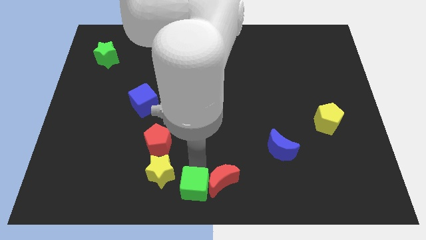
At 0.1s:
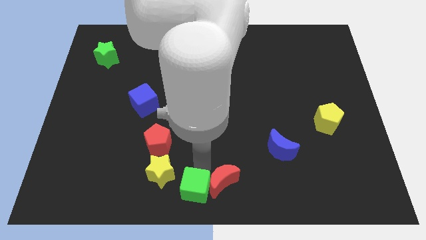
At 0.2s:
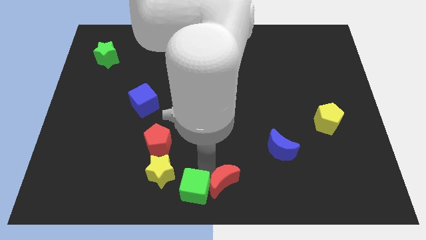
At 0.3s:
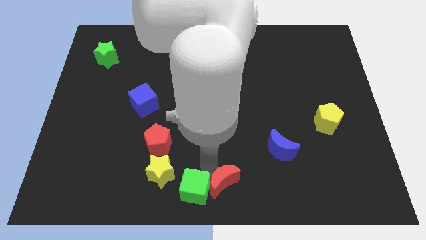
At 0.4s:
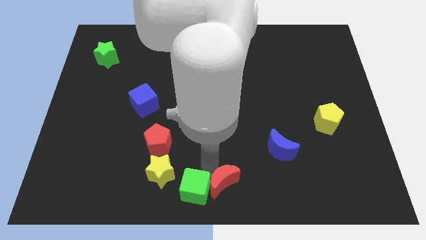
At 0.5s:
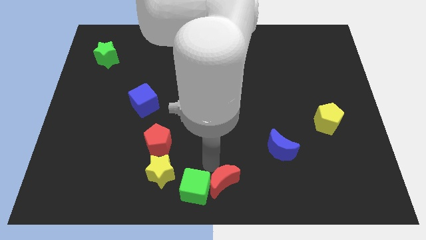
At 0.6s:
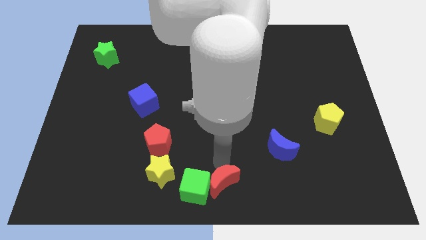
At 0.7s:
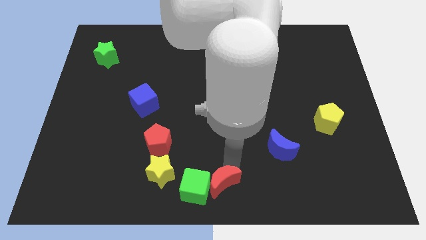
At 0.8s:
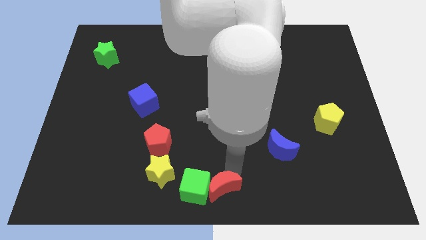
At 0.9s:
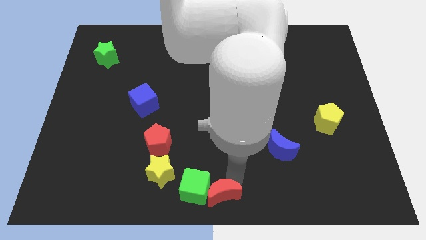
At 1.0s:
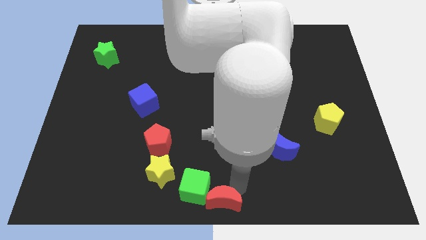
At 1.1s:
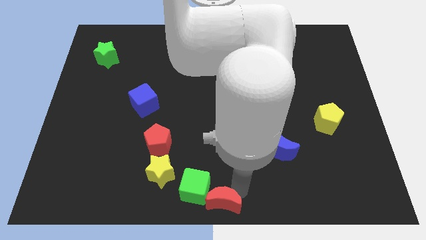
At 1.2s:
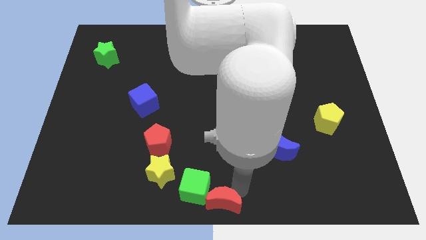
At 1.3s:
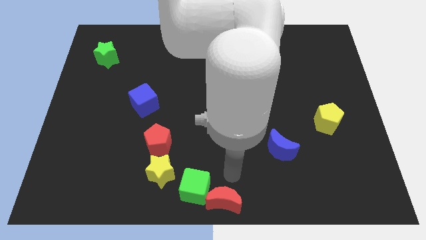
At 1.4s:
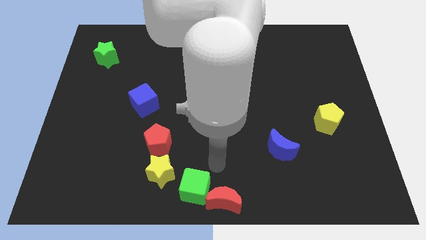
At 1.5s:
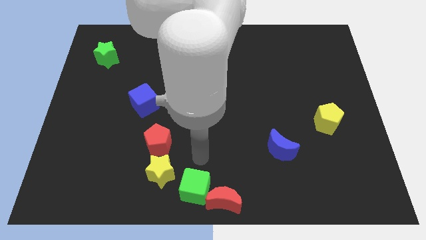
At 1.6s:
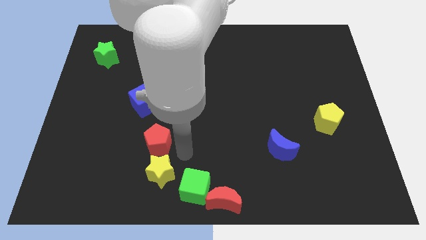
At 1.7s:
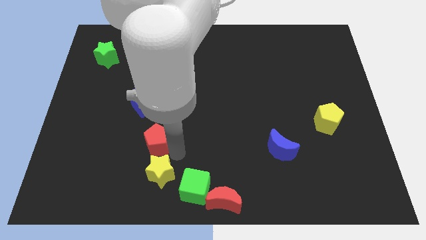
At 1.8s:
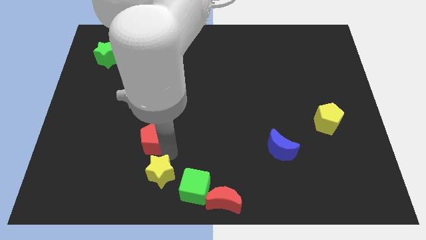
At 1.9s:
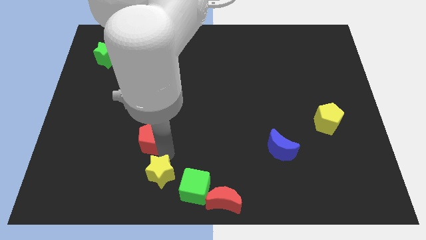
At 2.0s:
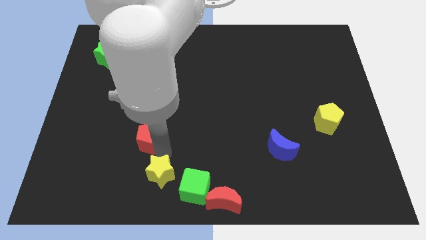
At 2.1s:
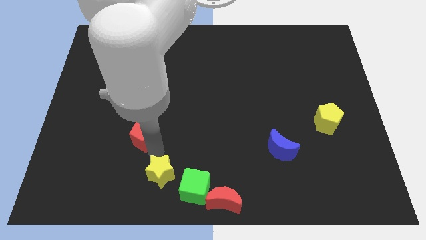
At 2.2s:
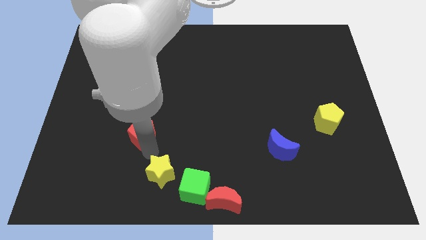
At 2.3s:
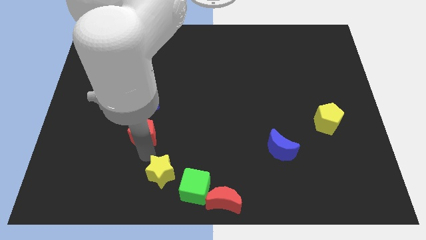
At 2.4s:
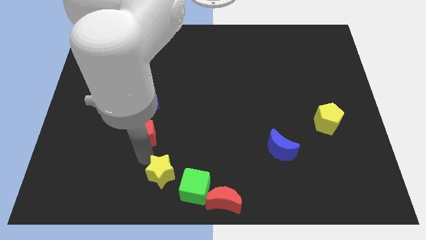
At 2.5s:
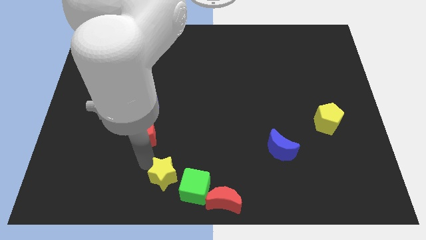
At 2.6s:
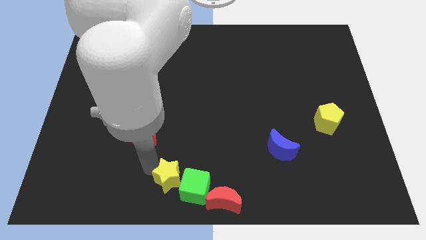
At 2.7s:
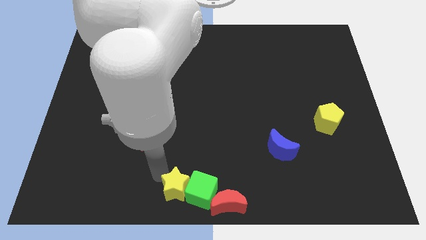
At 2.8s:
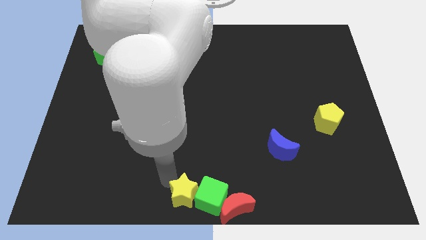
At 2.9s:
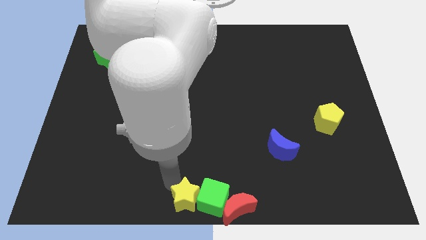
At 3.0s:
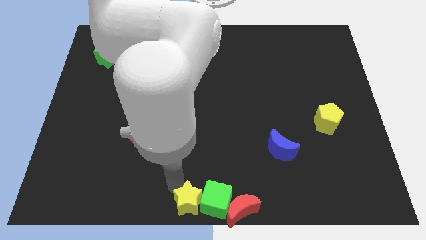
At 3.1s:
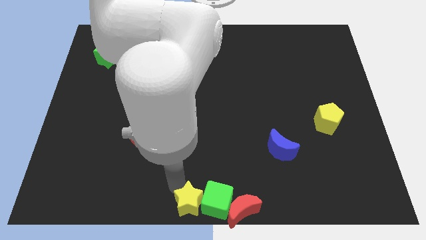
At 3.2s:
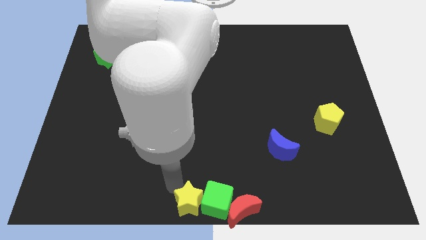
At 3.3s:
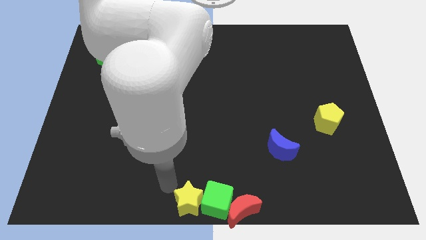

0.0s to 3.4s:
push the group of objects towards the bottom center of the board

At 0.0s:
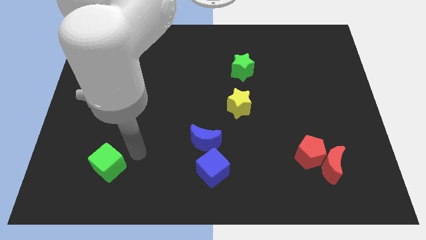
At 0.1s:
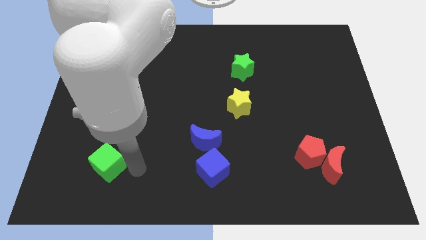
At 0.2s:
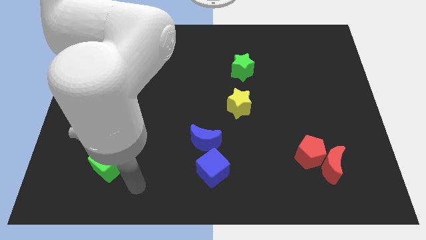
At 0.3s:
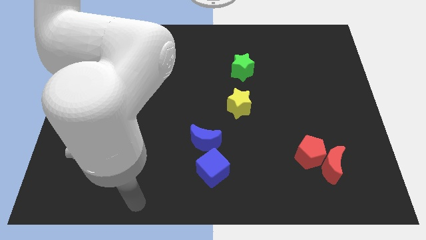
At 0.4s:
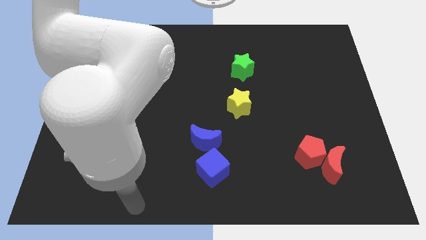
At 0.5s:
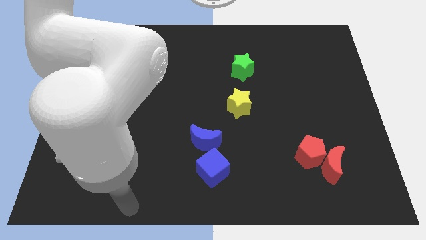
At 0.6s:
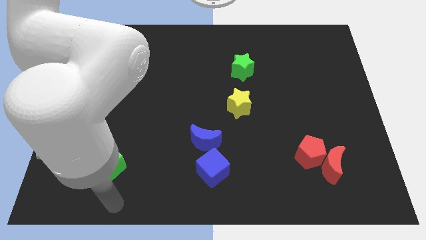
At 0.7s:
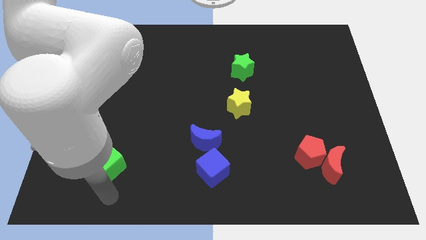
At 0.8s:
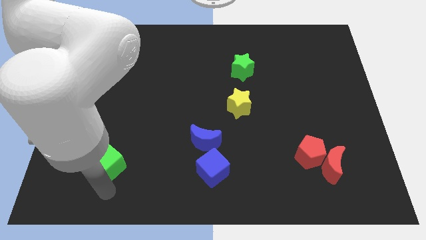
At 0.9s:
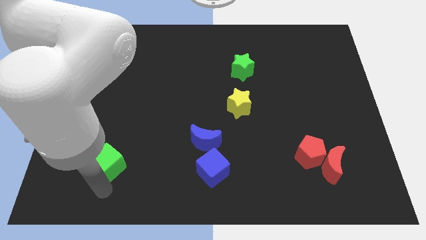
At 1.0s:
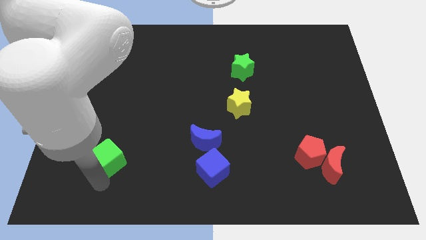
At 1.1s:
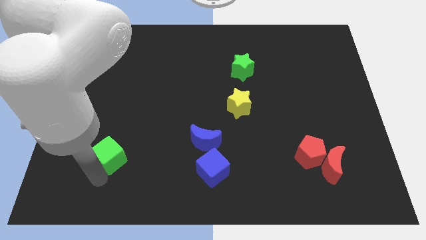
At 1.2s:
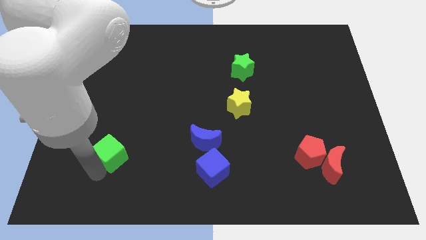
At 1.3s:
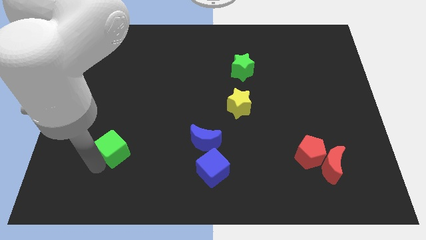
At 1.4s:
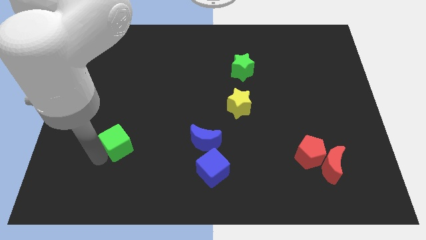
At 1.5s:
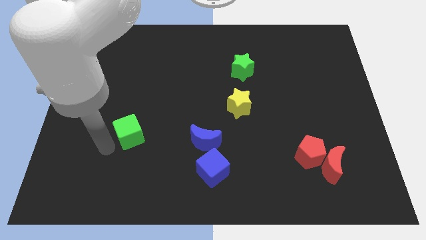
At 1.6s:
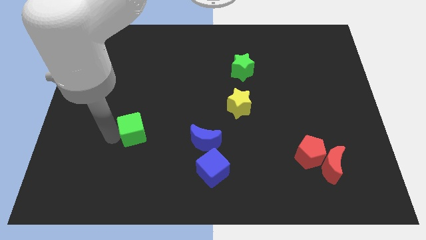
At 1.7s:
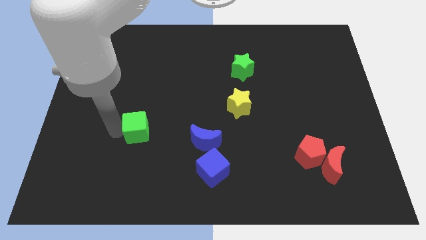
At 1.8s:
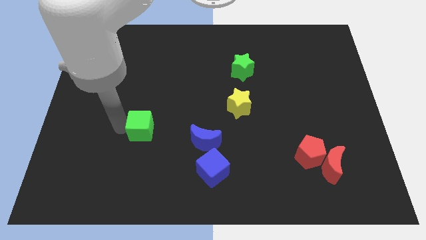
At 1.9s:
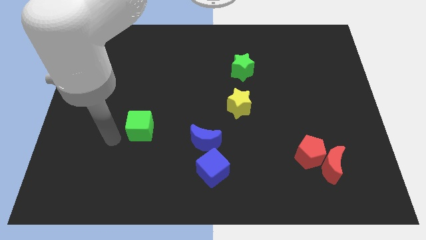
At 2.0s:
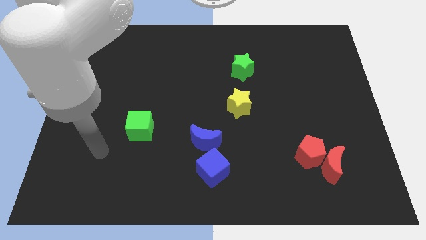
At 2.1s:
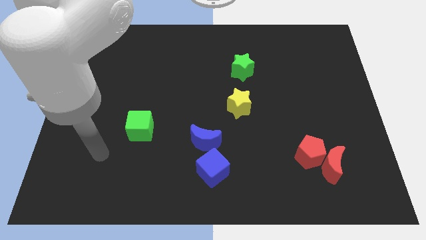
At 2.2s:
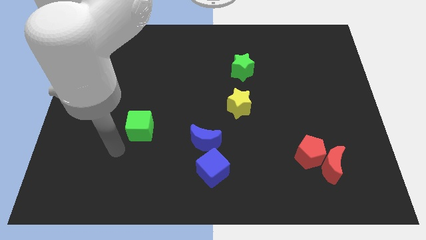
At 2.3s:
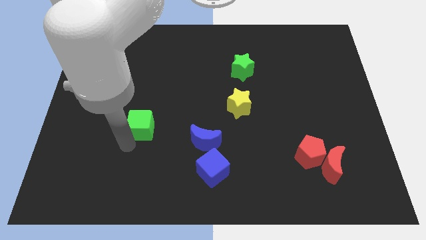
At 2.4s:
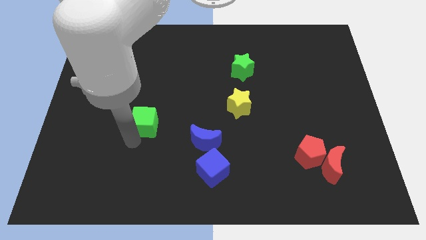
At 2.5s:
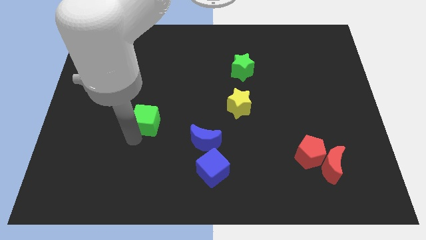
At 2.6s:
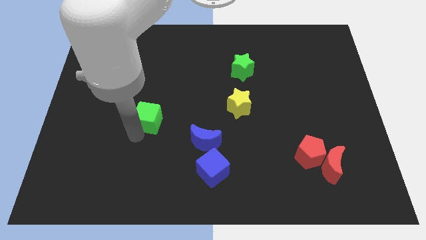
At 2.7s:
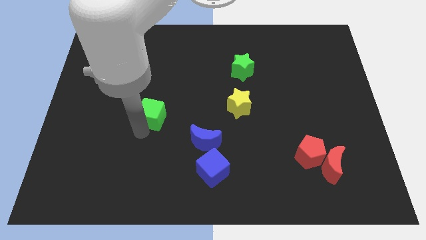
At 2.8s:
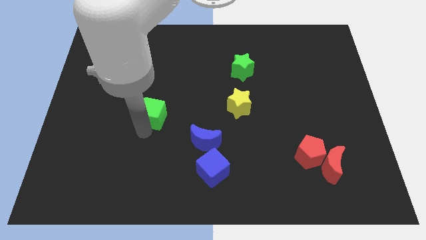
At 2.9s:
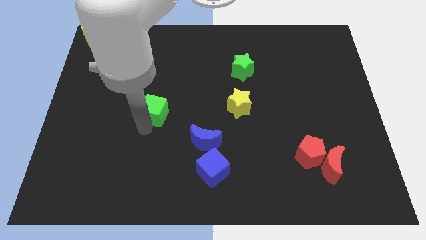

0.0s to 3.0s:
move the green cube parallel to the yellow star

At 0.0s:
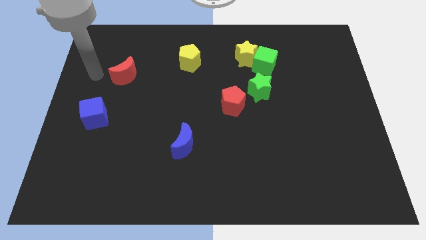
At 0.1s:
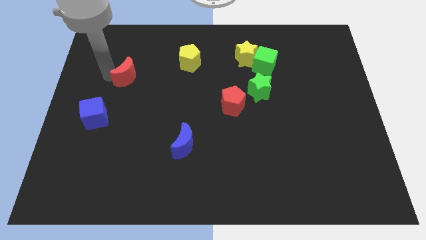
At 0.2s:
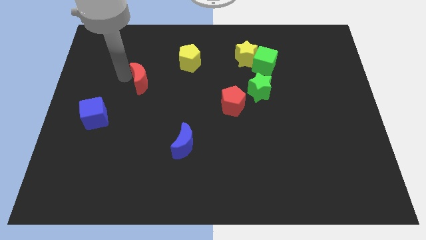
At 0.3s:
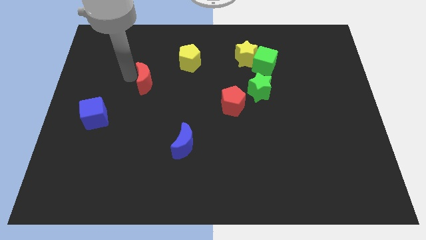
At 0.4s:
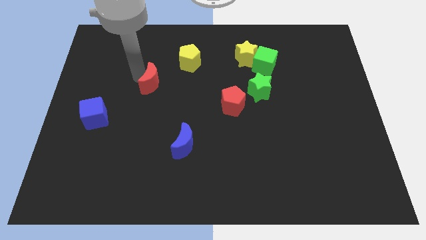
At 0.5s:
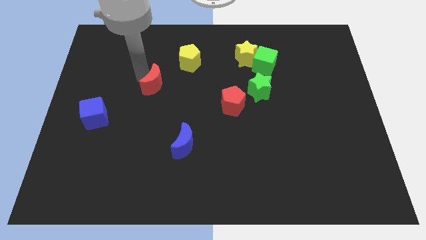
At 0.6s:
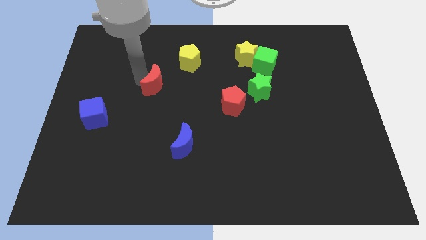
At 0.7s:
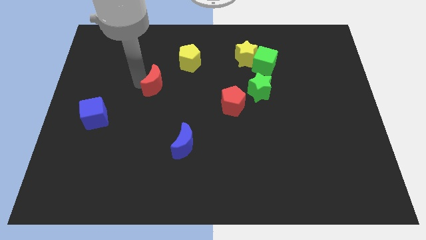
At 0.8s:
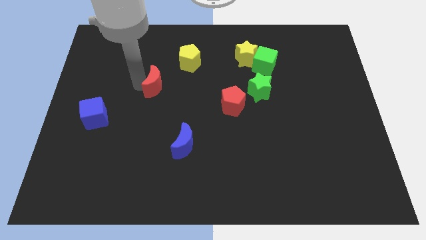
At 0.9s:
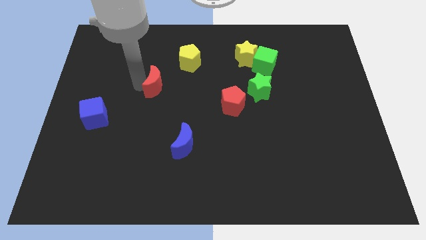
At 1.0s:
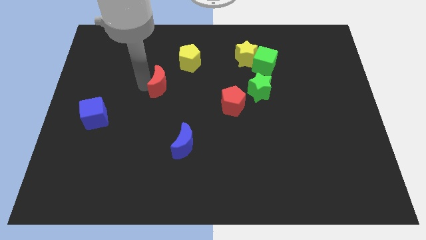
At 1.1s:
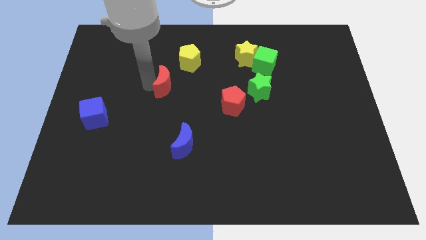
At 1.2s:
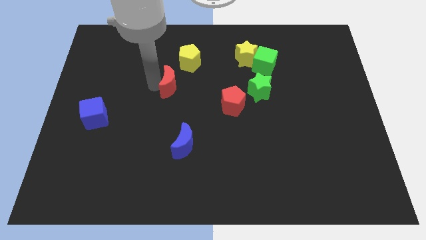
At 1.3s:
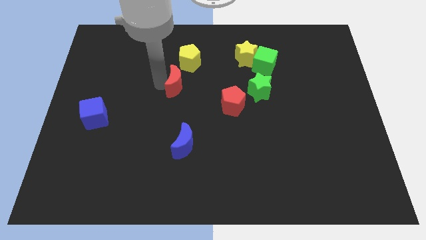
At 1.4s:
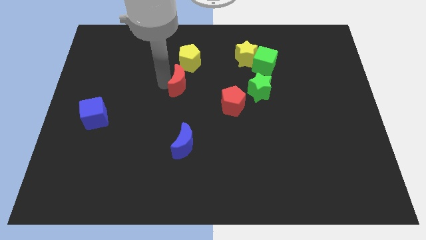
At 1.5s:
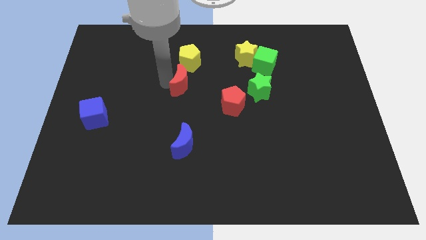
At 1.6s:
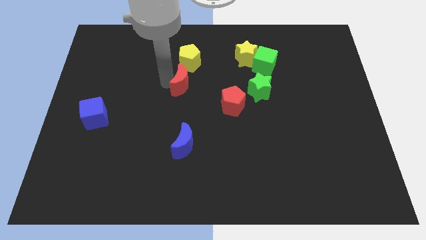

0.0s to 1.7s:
place the red moon below the yellow pentagon

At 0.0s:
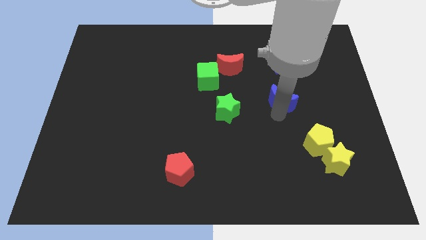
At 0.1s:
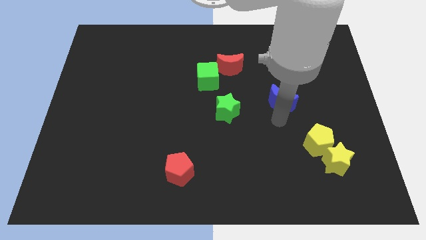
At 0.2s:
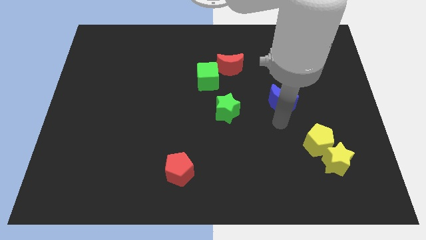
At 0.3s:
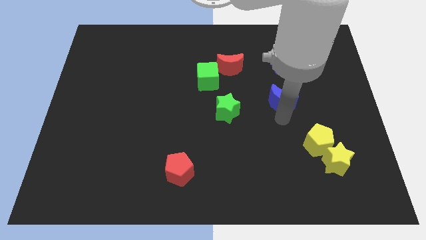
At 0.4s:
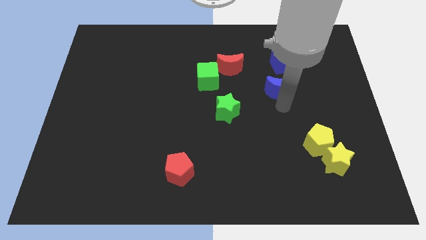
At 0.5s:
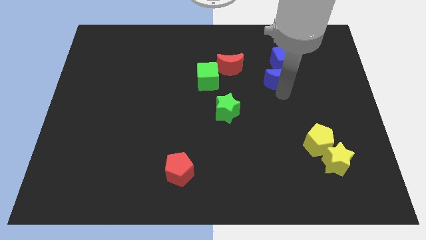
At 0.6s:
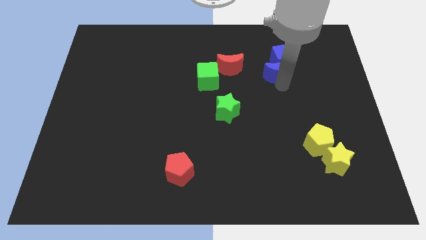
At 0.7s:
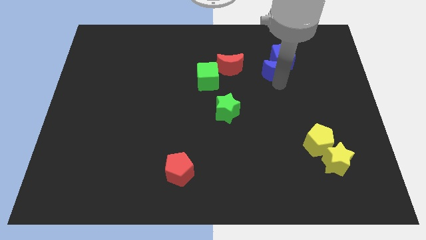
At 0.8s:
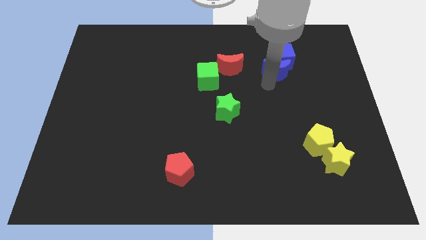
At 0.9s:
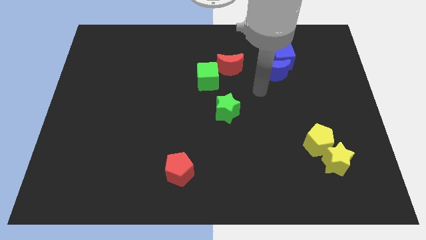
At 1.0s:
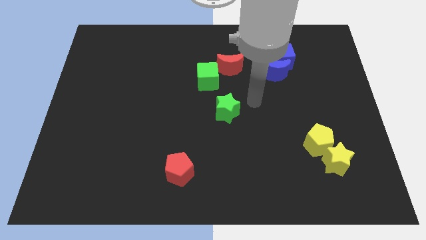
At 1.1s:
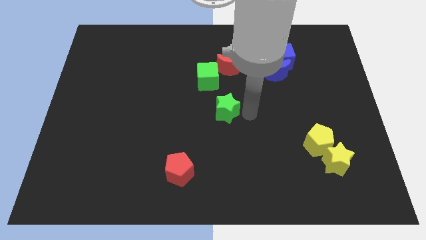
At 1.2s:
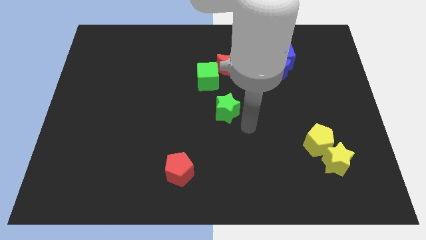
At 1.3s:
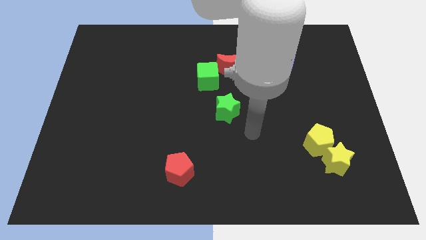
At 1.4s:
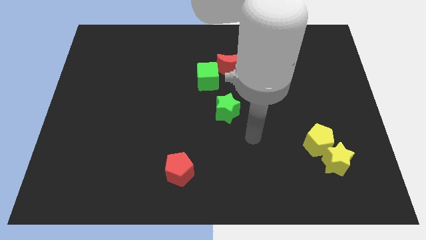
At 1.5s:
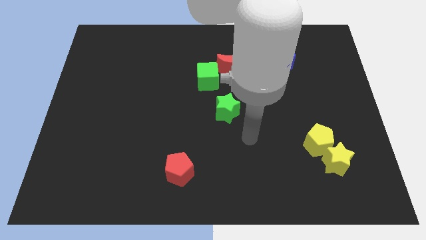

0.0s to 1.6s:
place the blue moon below the blue cube
